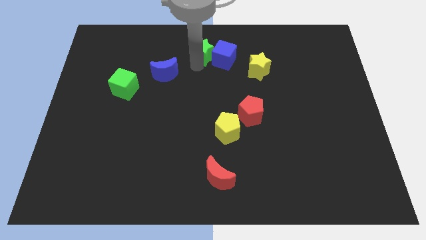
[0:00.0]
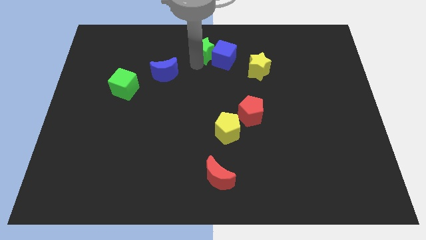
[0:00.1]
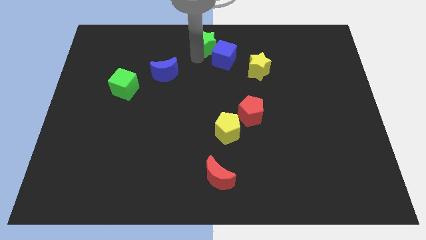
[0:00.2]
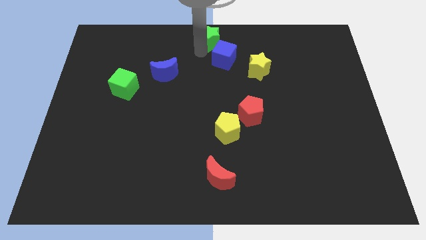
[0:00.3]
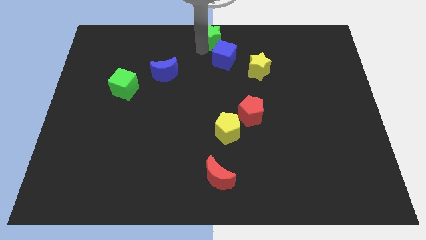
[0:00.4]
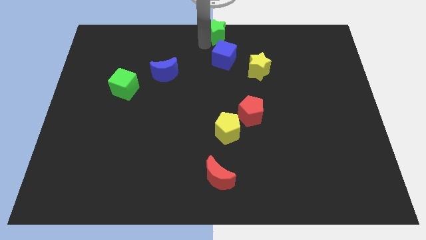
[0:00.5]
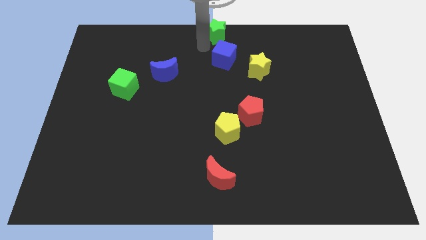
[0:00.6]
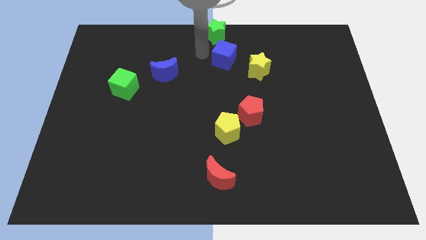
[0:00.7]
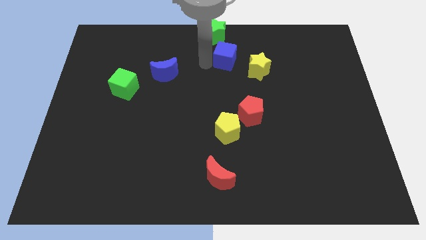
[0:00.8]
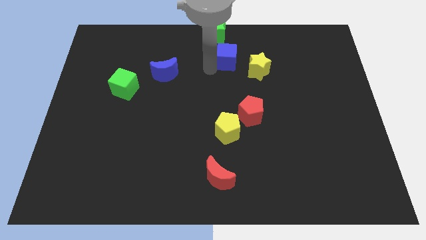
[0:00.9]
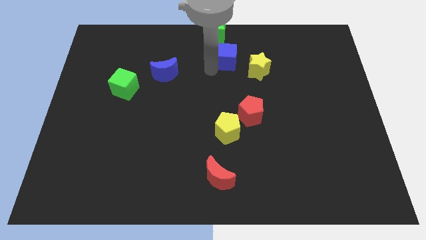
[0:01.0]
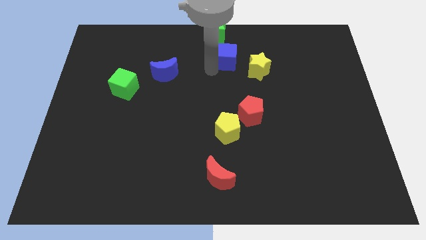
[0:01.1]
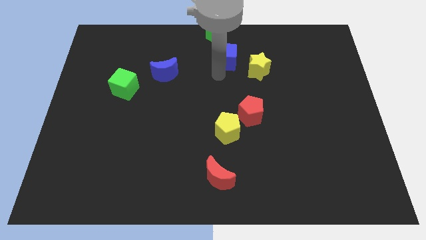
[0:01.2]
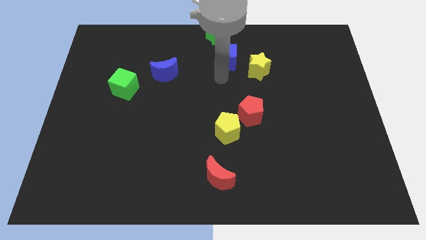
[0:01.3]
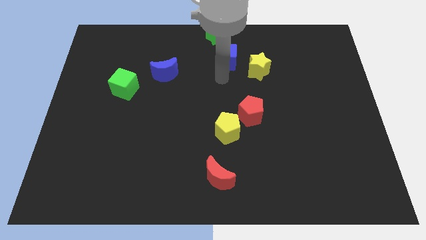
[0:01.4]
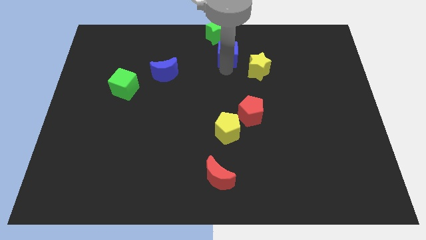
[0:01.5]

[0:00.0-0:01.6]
place the green star at the top middle

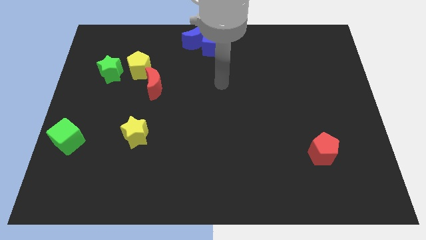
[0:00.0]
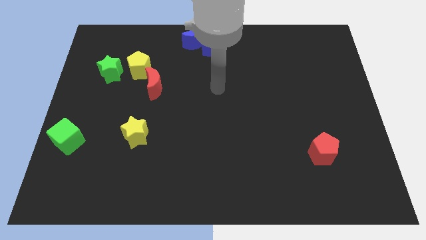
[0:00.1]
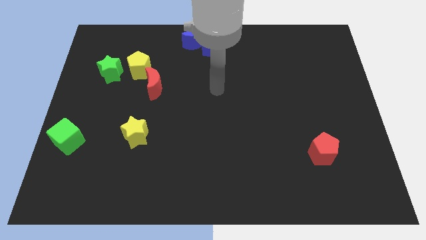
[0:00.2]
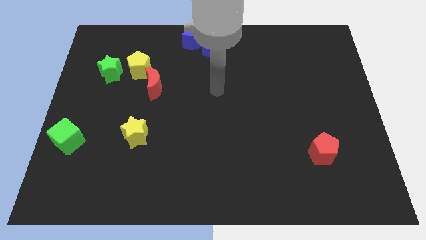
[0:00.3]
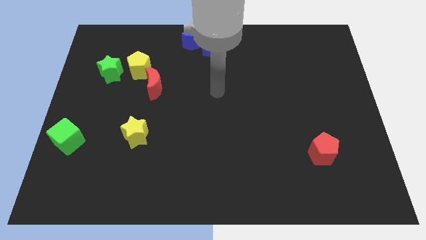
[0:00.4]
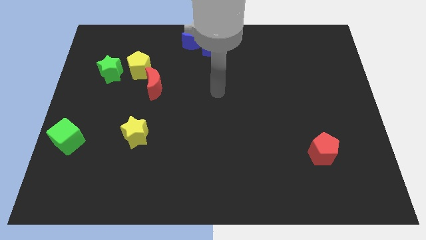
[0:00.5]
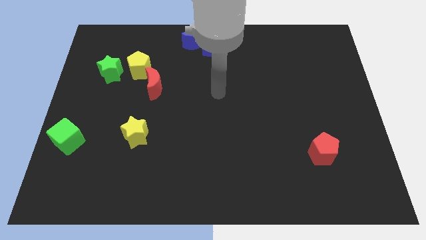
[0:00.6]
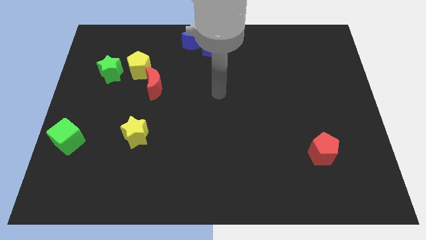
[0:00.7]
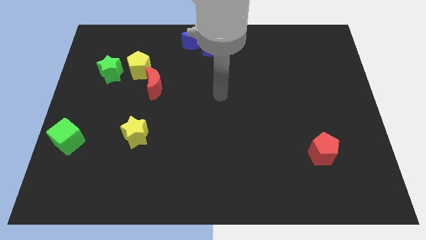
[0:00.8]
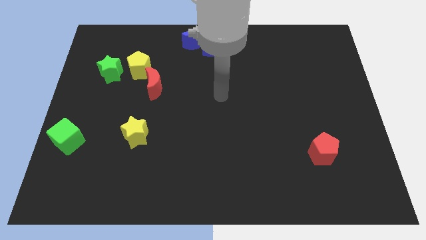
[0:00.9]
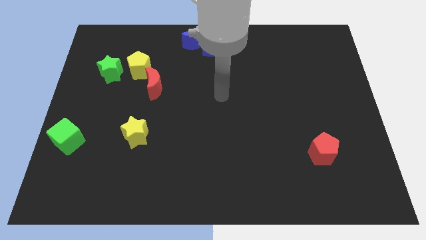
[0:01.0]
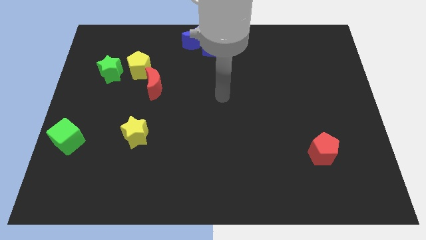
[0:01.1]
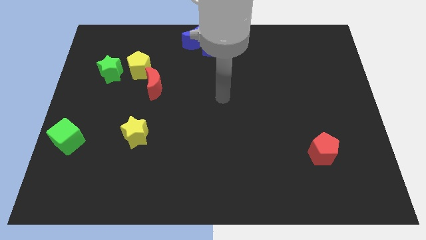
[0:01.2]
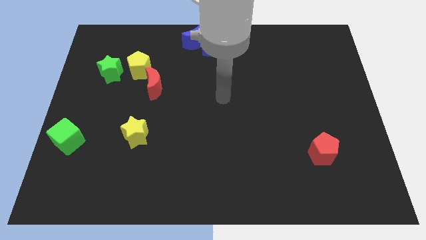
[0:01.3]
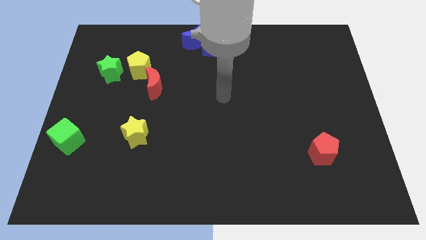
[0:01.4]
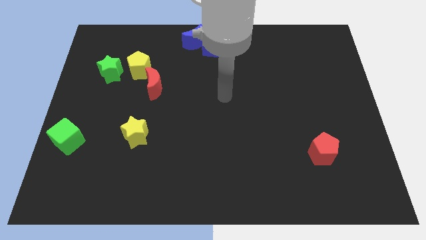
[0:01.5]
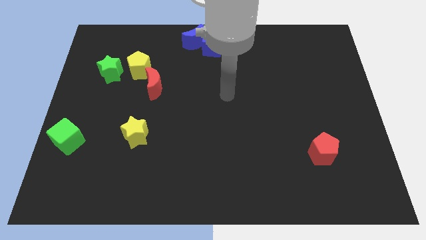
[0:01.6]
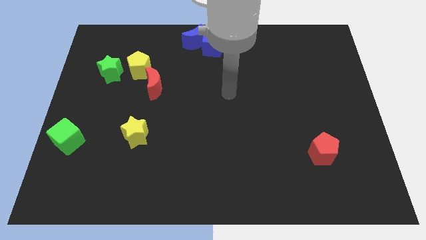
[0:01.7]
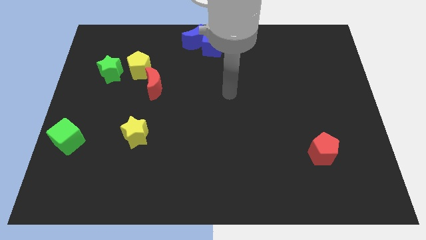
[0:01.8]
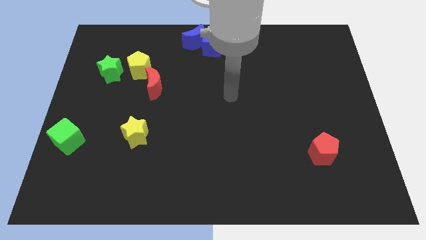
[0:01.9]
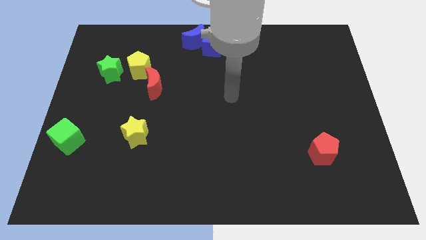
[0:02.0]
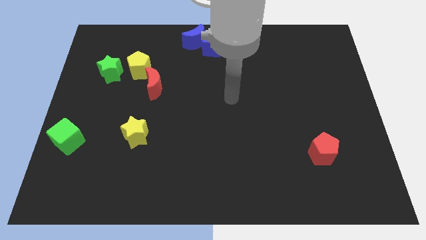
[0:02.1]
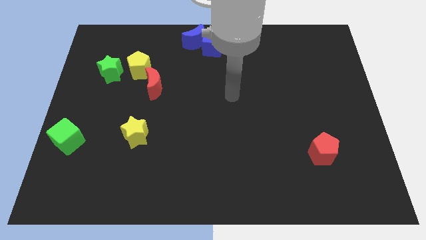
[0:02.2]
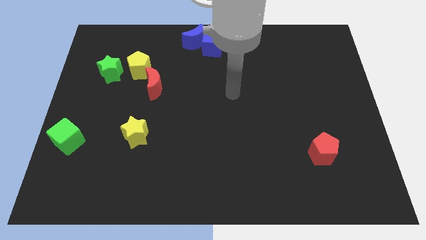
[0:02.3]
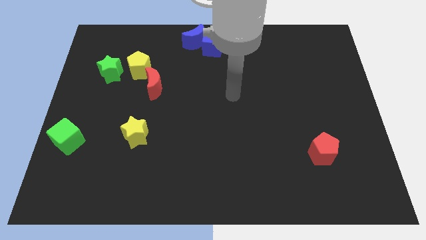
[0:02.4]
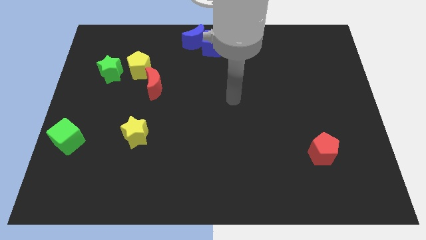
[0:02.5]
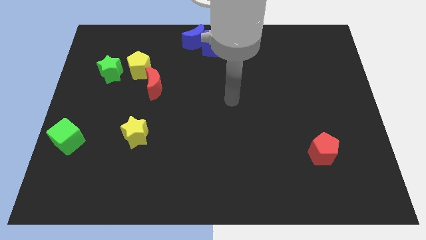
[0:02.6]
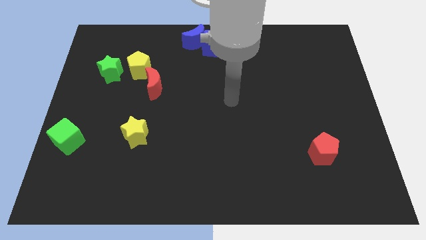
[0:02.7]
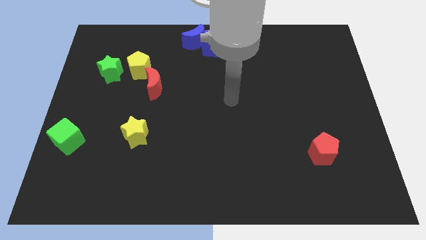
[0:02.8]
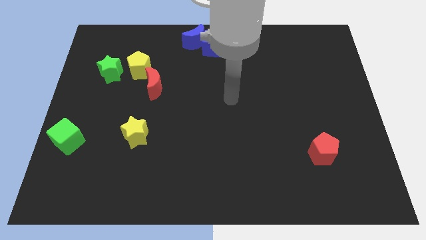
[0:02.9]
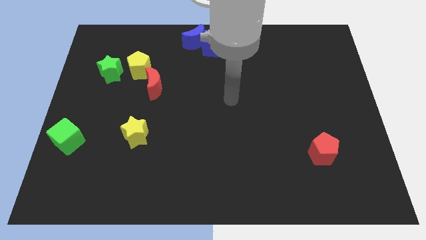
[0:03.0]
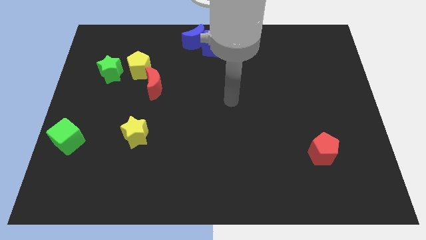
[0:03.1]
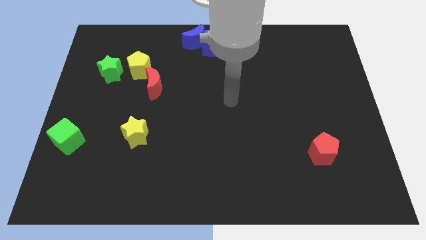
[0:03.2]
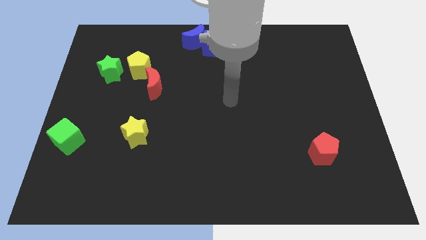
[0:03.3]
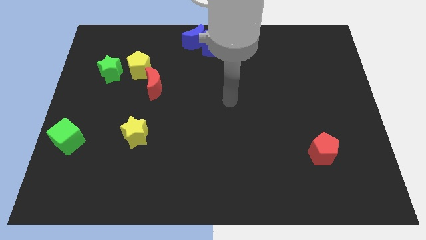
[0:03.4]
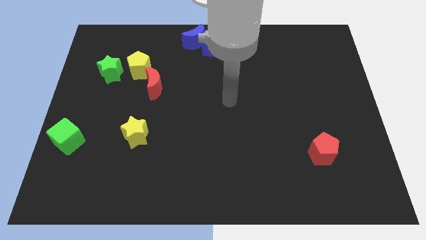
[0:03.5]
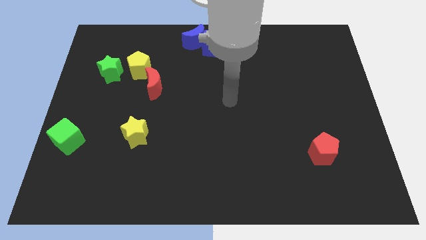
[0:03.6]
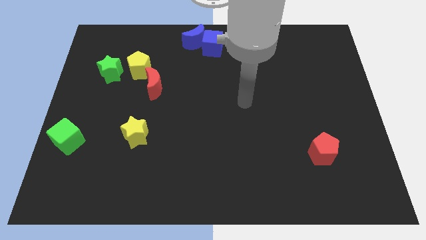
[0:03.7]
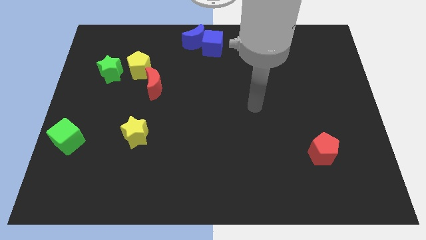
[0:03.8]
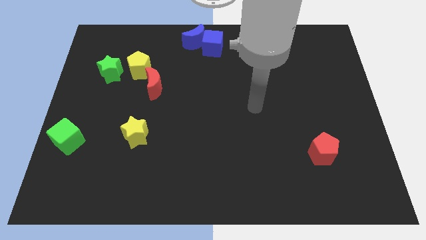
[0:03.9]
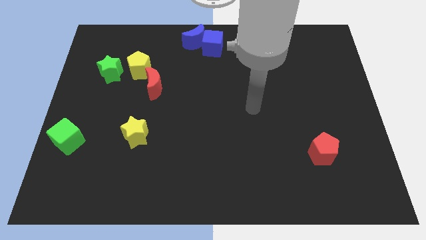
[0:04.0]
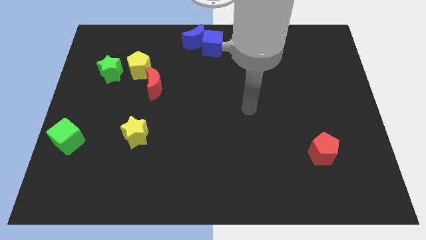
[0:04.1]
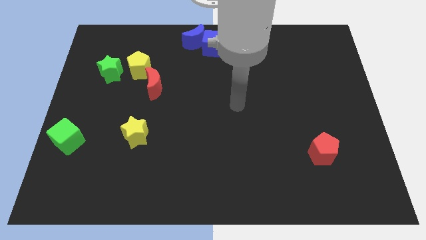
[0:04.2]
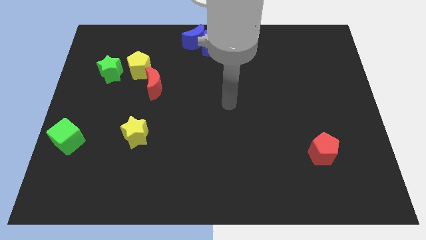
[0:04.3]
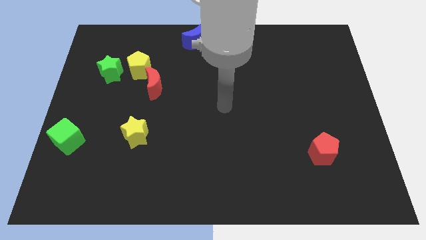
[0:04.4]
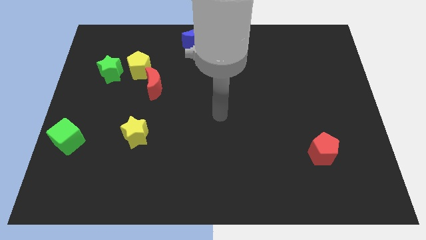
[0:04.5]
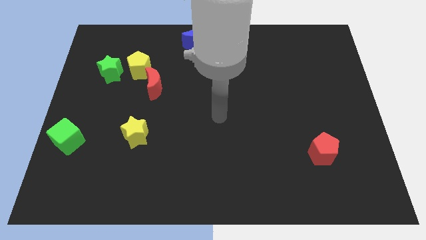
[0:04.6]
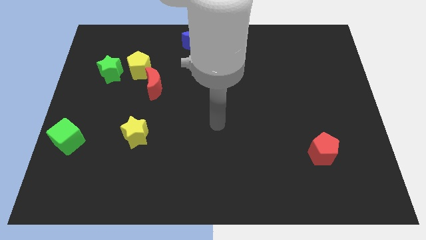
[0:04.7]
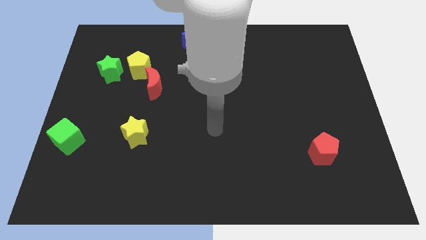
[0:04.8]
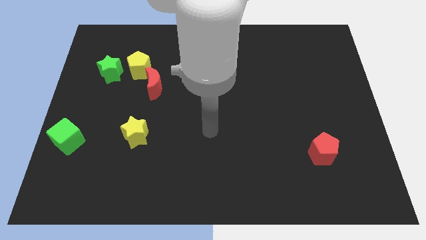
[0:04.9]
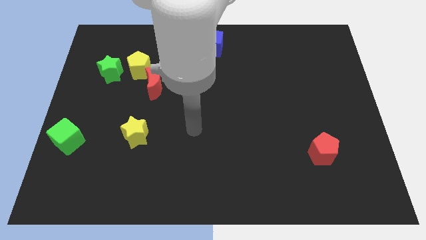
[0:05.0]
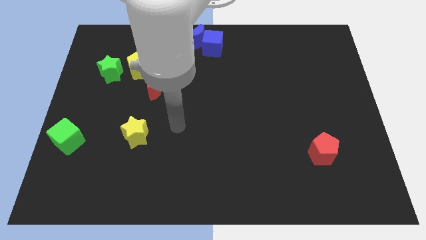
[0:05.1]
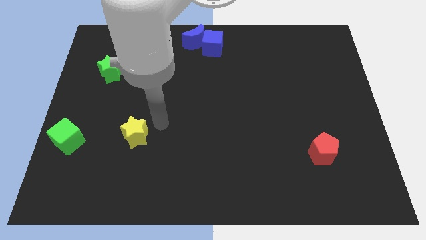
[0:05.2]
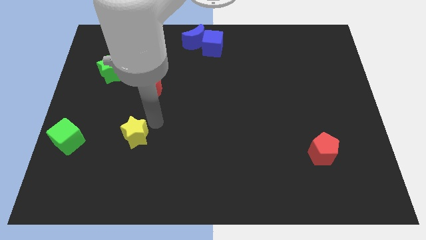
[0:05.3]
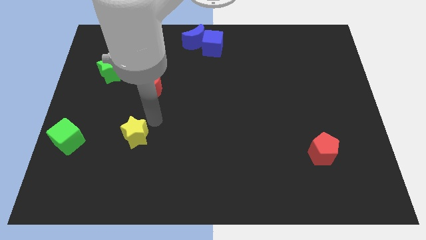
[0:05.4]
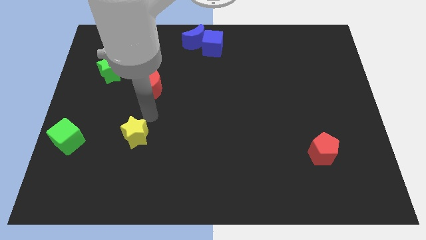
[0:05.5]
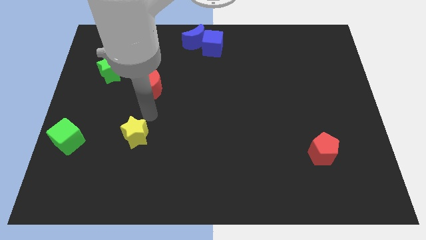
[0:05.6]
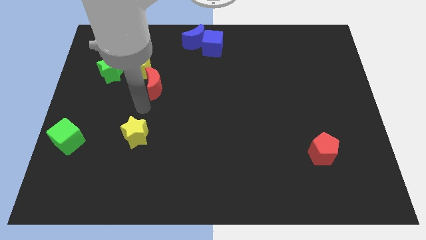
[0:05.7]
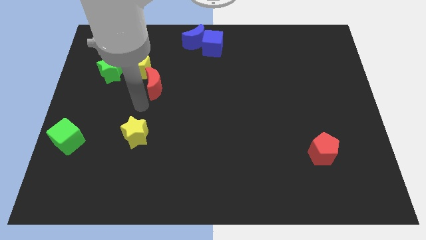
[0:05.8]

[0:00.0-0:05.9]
place your arm to the bottom of red moon

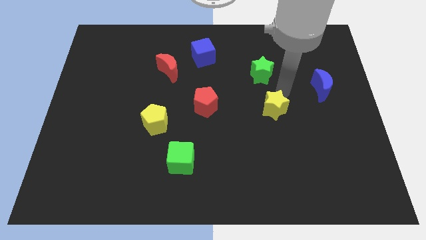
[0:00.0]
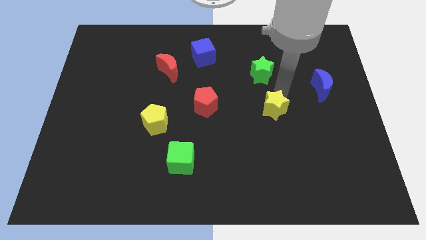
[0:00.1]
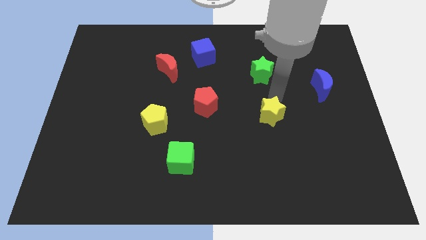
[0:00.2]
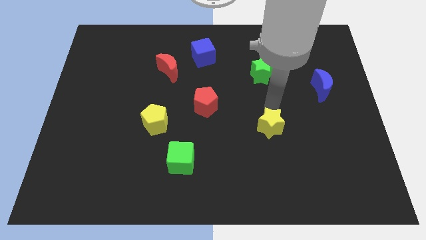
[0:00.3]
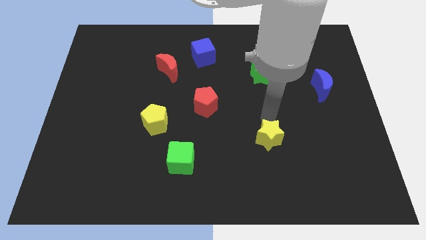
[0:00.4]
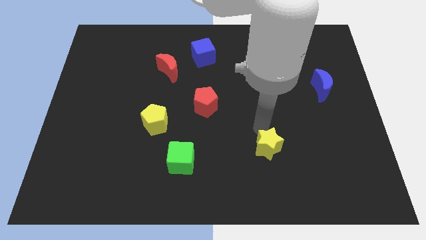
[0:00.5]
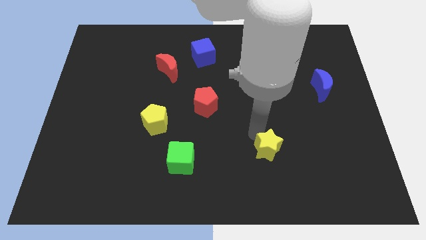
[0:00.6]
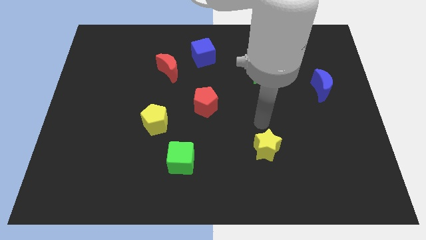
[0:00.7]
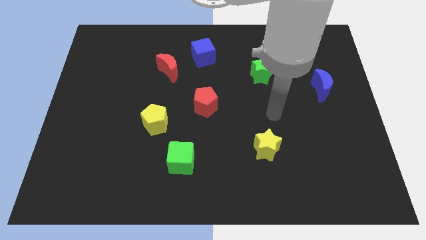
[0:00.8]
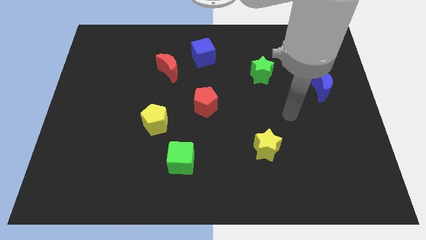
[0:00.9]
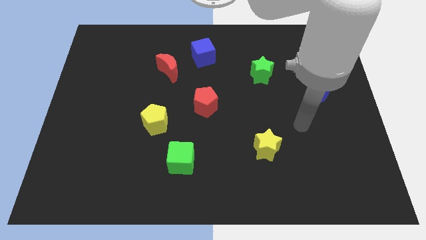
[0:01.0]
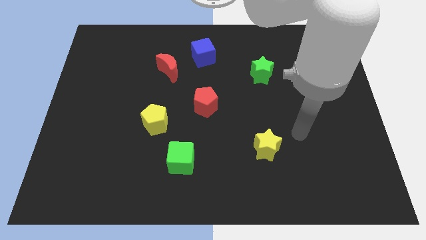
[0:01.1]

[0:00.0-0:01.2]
slide the yellow star slightly towards down

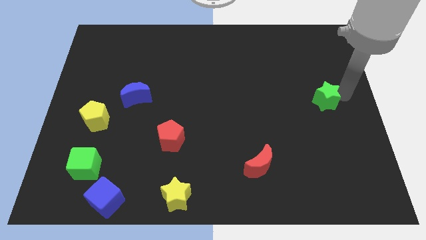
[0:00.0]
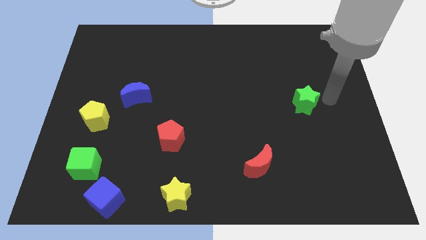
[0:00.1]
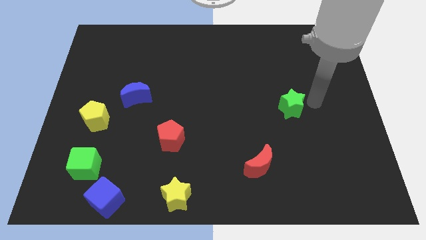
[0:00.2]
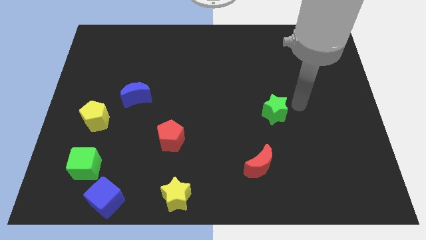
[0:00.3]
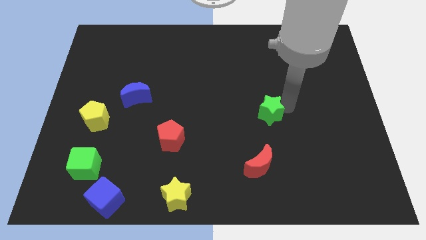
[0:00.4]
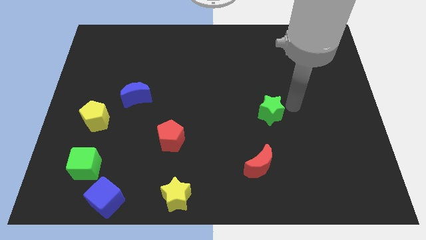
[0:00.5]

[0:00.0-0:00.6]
move the green star towards the center of board
